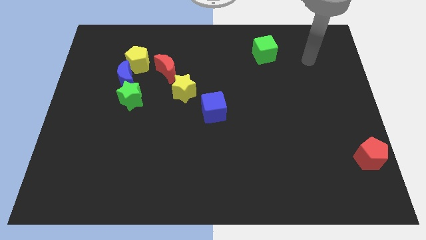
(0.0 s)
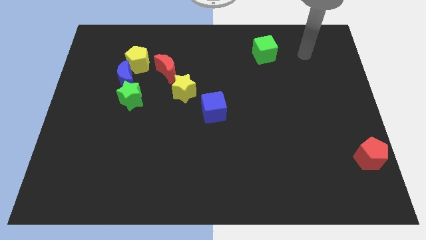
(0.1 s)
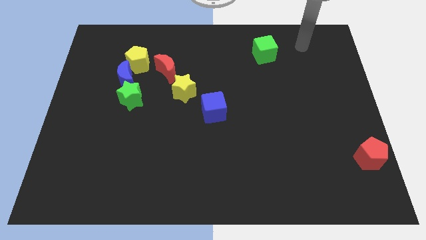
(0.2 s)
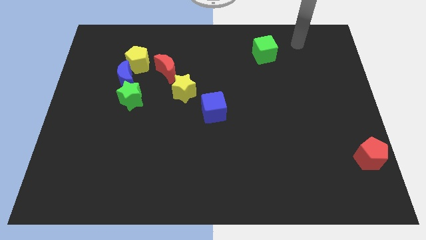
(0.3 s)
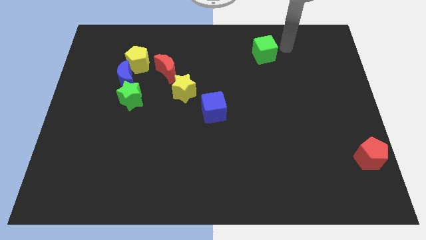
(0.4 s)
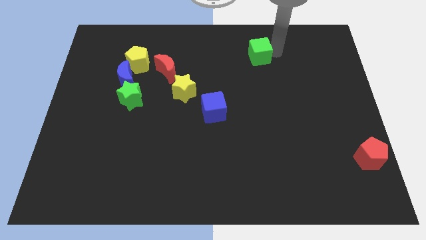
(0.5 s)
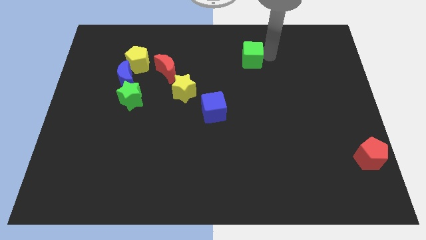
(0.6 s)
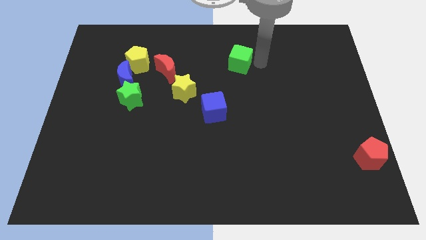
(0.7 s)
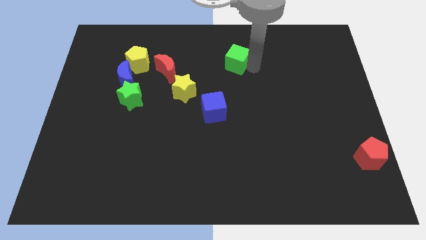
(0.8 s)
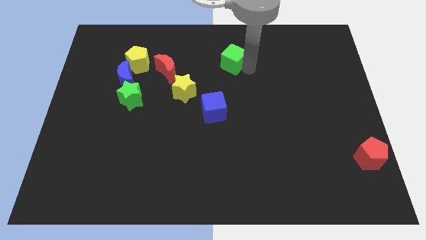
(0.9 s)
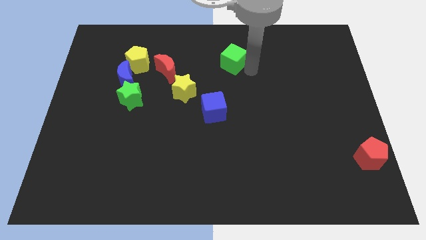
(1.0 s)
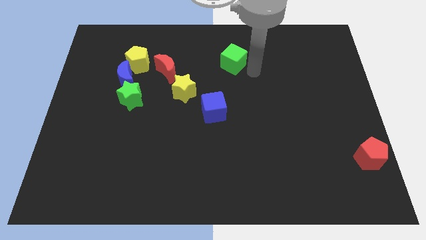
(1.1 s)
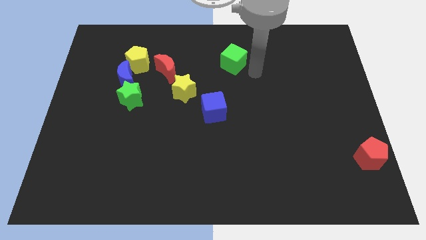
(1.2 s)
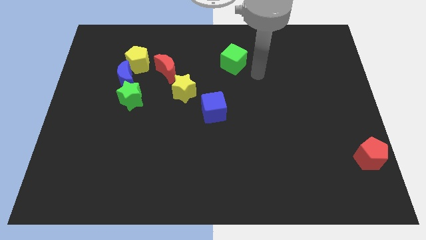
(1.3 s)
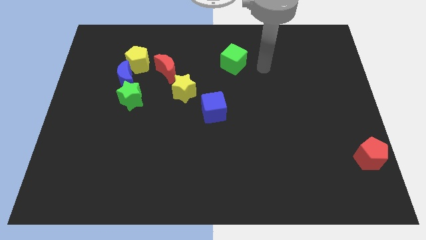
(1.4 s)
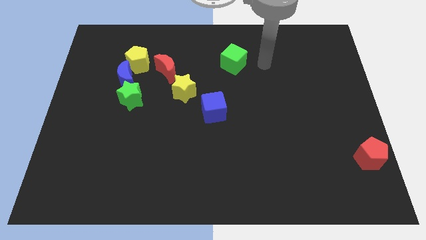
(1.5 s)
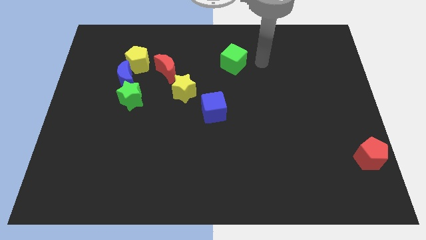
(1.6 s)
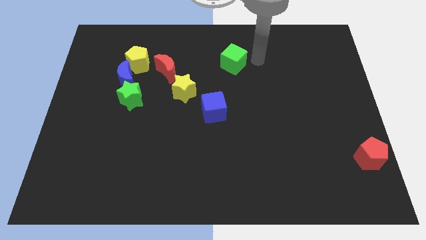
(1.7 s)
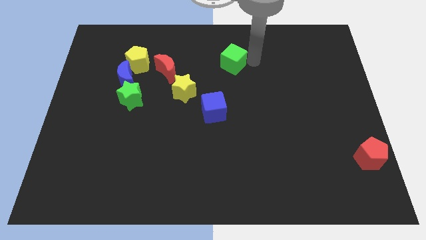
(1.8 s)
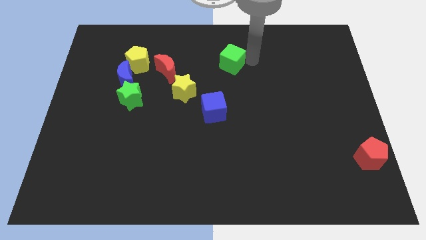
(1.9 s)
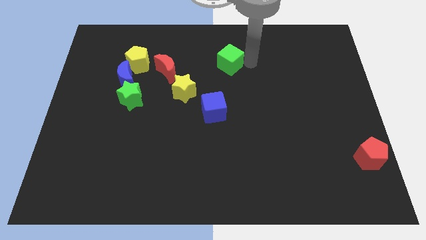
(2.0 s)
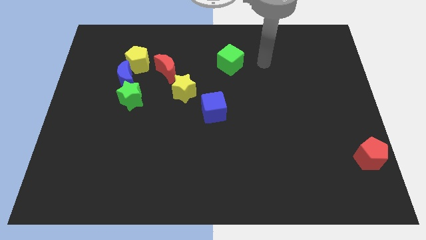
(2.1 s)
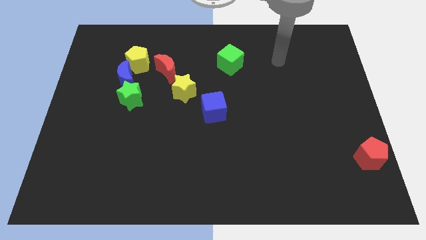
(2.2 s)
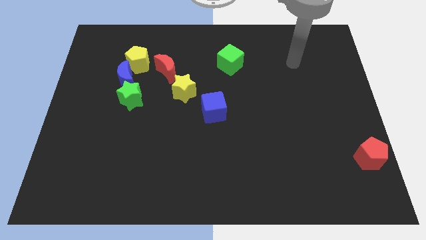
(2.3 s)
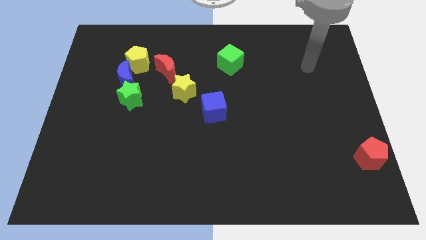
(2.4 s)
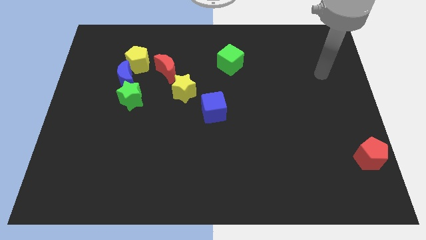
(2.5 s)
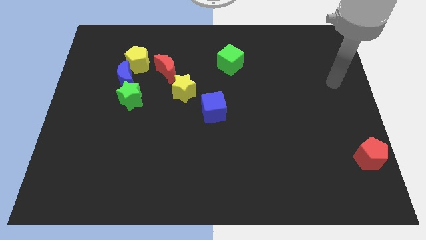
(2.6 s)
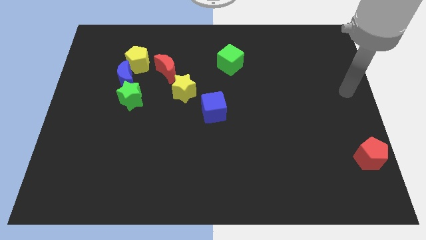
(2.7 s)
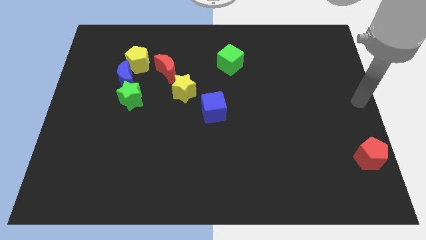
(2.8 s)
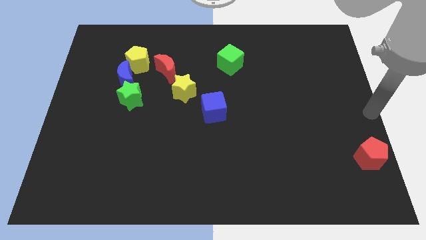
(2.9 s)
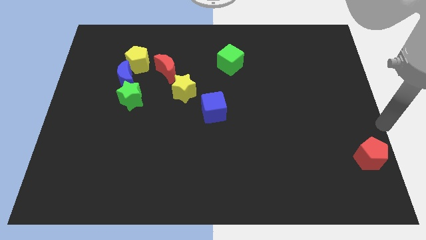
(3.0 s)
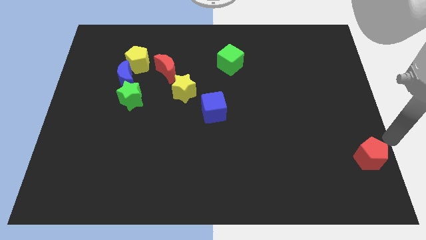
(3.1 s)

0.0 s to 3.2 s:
put the green cube to the top right of the yellow star

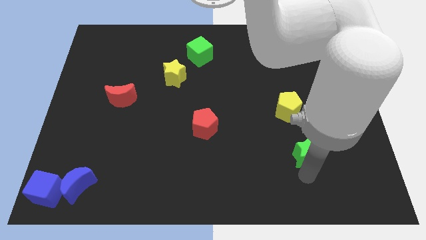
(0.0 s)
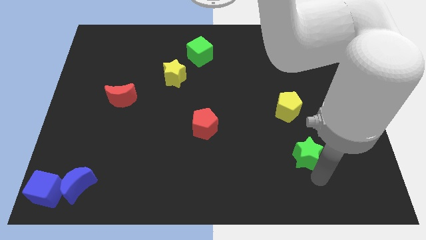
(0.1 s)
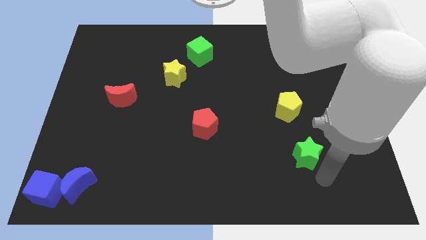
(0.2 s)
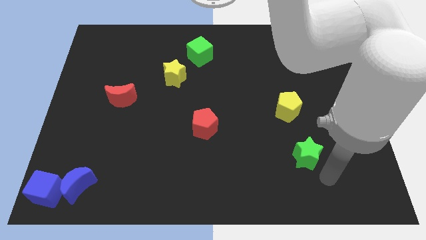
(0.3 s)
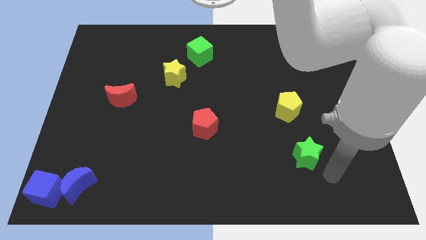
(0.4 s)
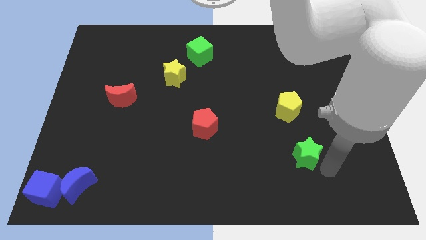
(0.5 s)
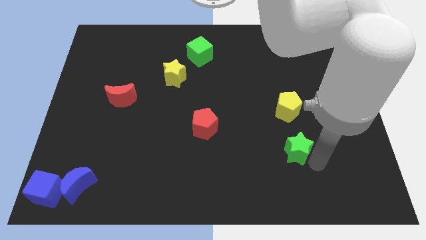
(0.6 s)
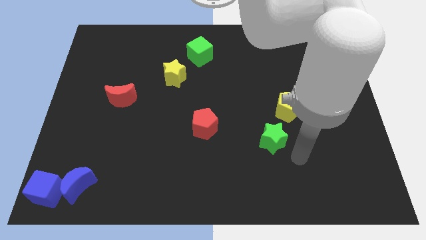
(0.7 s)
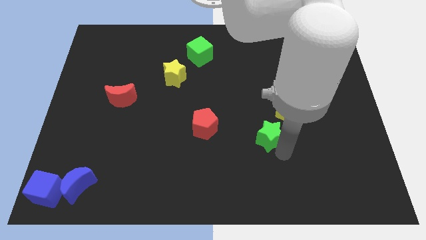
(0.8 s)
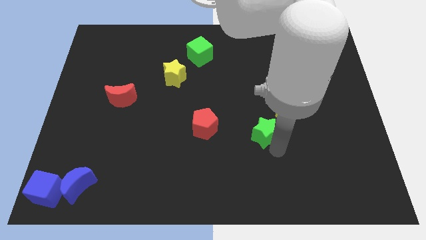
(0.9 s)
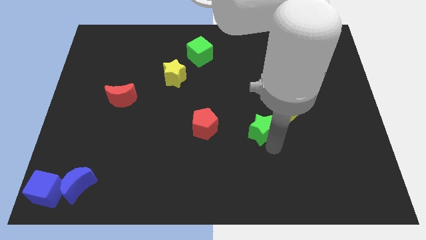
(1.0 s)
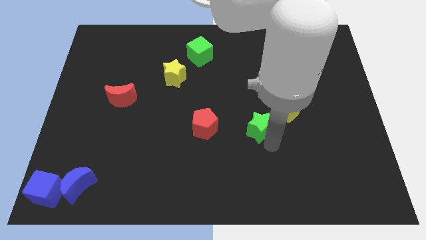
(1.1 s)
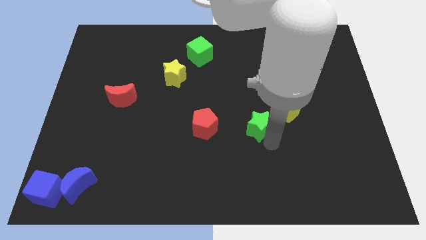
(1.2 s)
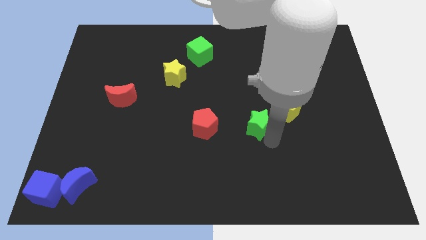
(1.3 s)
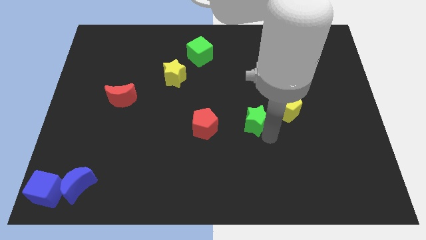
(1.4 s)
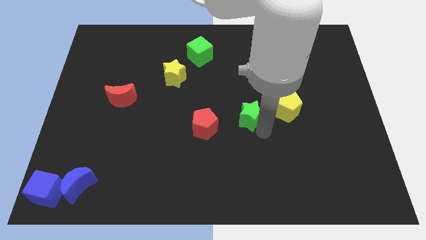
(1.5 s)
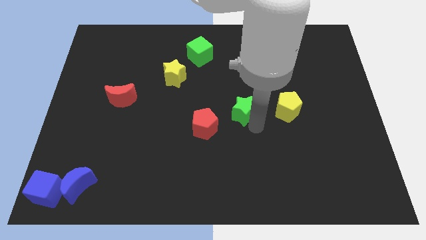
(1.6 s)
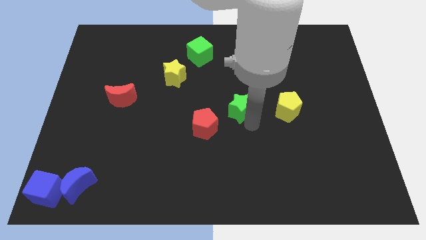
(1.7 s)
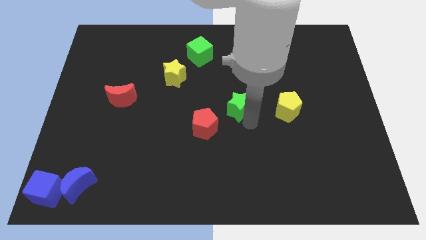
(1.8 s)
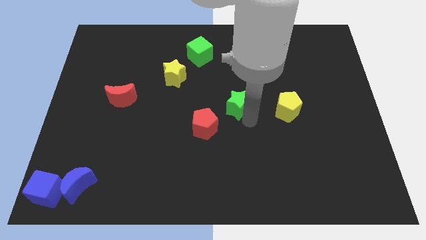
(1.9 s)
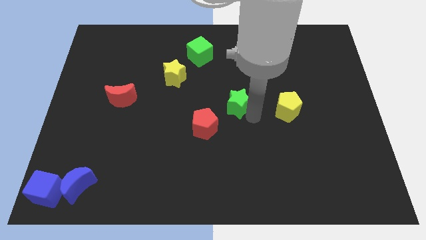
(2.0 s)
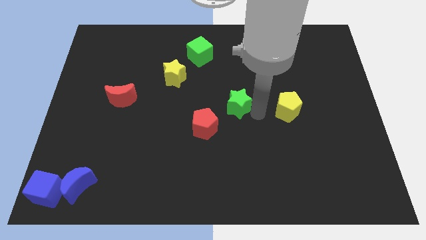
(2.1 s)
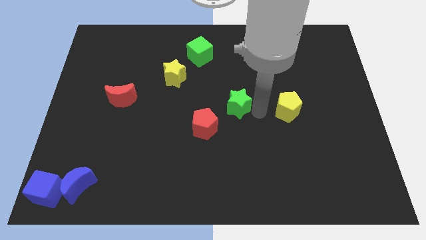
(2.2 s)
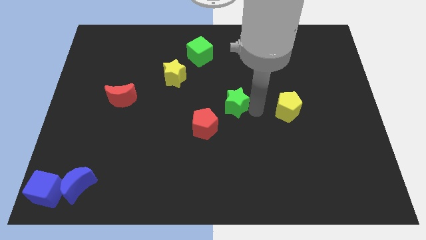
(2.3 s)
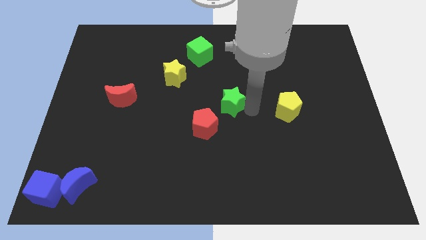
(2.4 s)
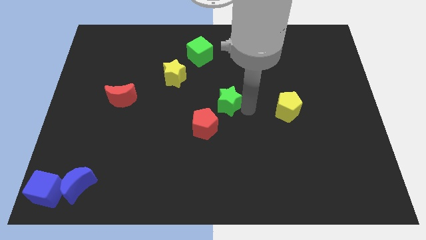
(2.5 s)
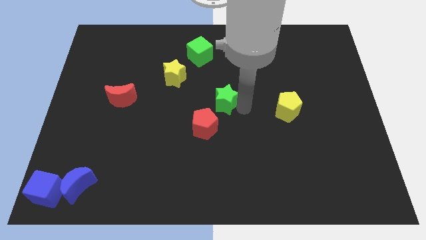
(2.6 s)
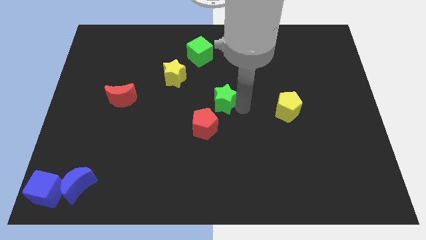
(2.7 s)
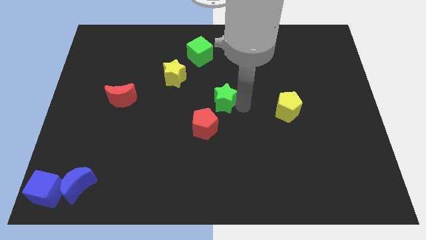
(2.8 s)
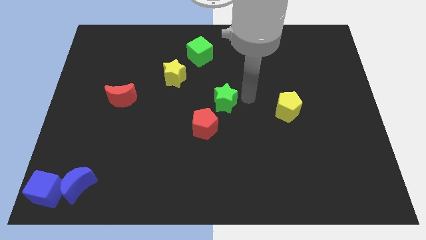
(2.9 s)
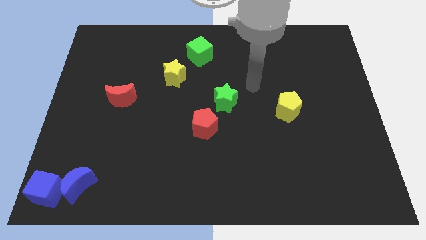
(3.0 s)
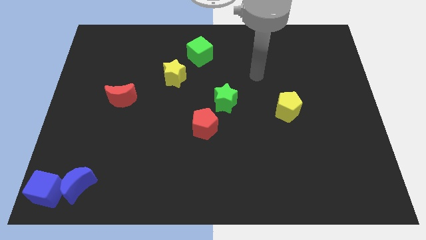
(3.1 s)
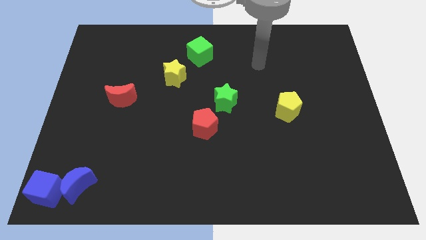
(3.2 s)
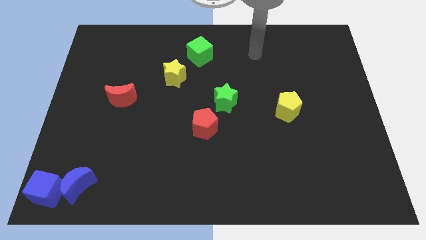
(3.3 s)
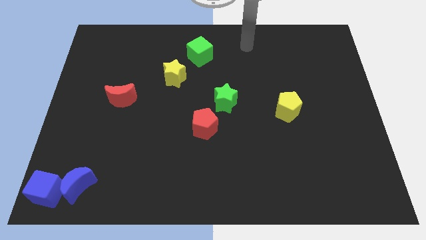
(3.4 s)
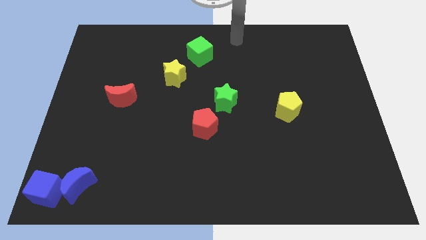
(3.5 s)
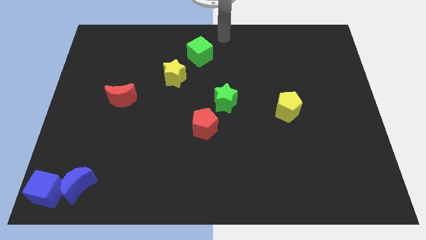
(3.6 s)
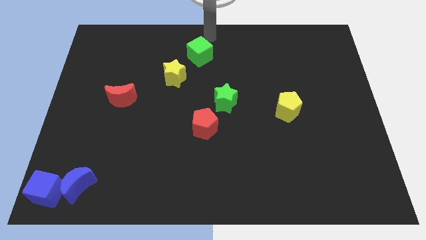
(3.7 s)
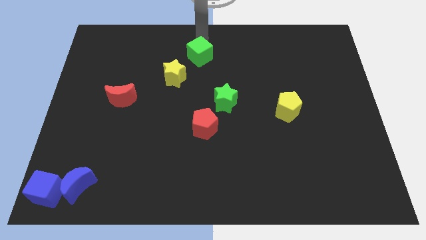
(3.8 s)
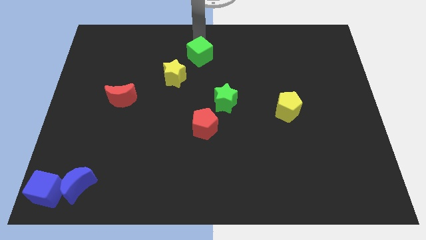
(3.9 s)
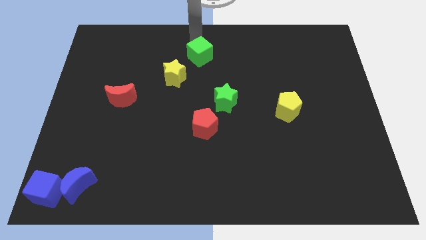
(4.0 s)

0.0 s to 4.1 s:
move the green star to the top right of the red pentagon

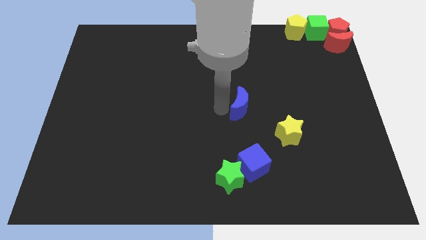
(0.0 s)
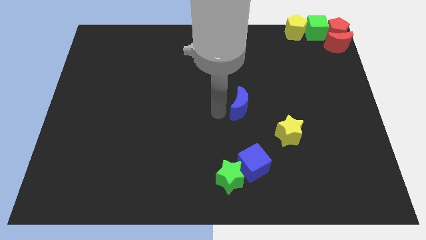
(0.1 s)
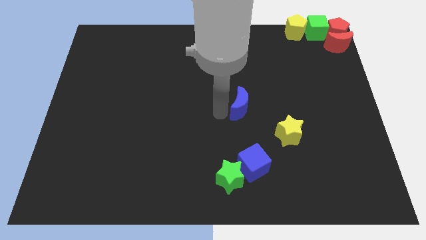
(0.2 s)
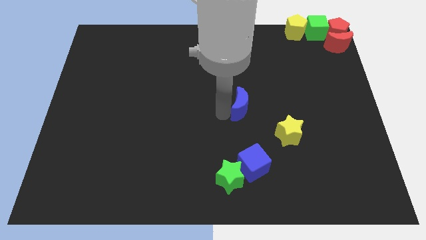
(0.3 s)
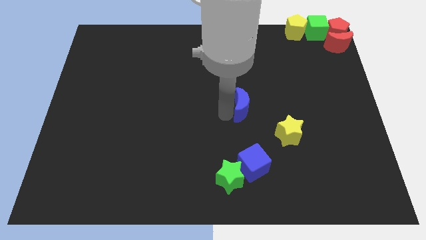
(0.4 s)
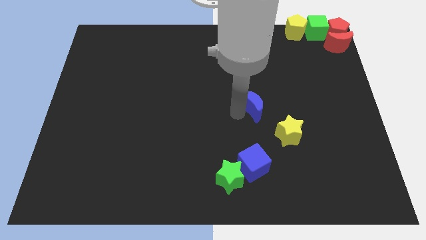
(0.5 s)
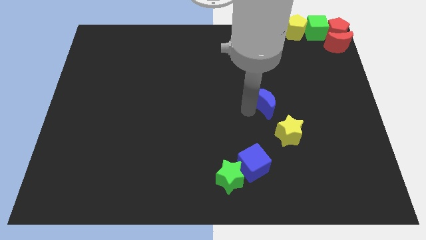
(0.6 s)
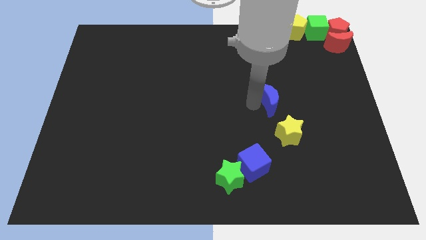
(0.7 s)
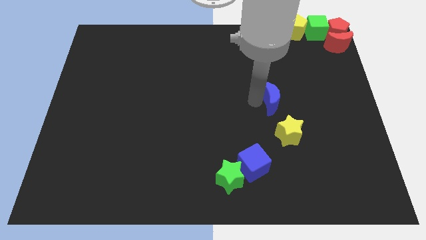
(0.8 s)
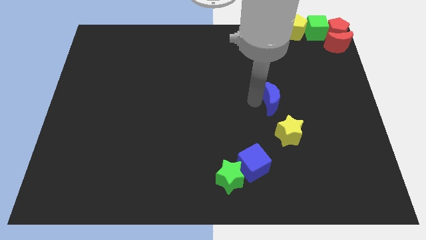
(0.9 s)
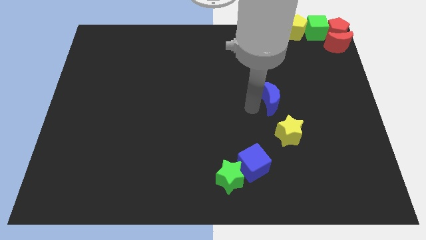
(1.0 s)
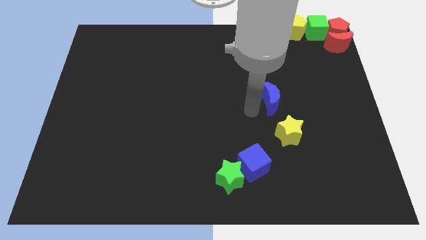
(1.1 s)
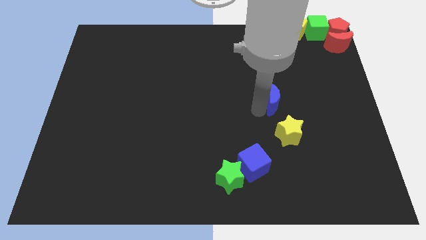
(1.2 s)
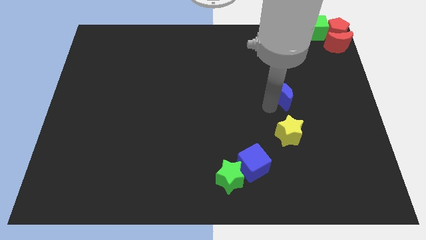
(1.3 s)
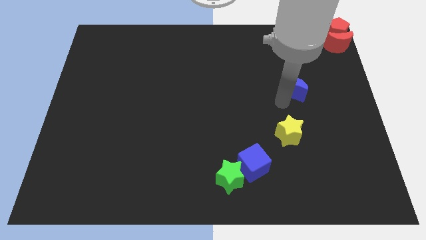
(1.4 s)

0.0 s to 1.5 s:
place the blue moon vertically above the yellow star

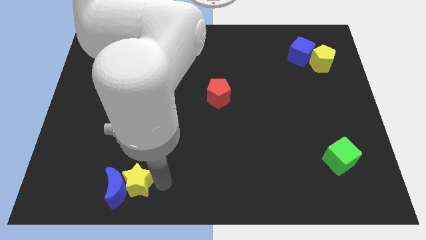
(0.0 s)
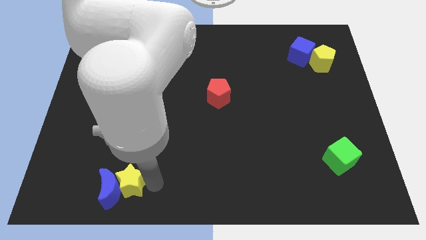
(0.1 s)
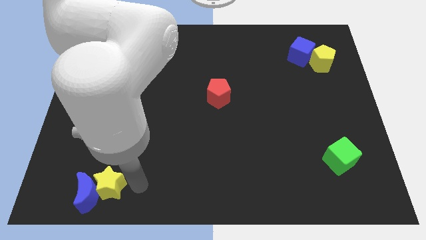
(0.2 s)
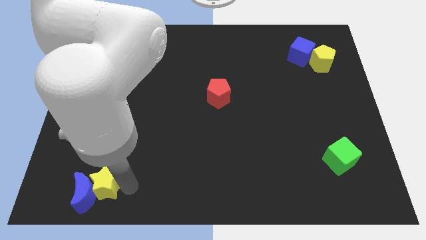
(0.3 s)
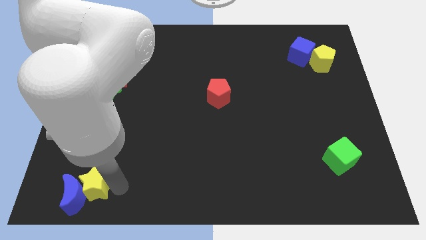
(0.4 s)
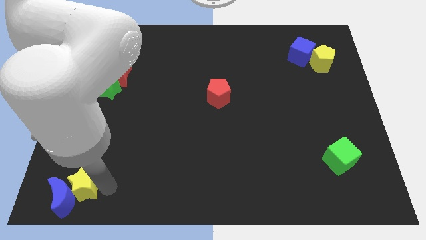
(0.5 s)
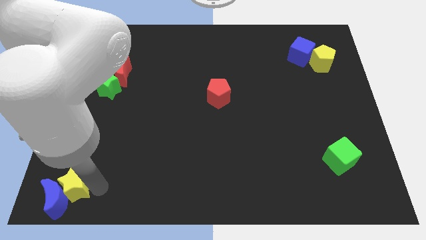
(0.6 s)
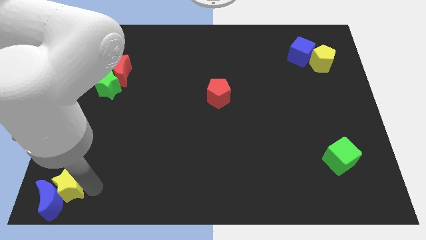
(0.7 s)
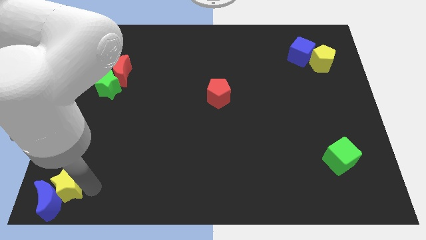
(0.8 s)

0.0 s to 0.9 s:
push blue moon and yellow star slightly to the left
